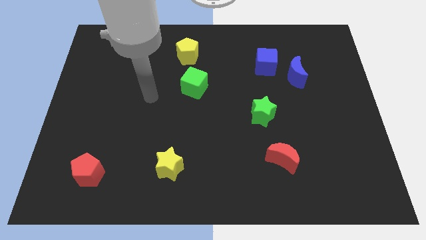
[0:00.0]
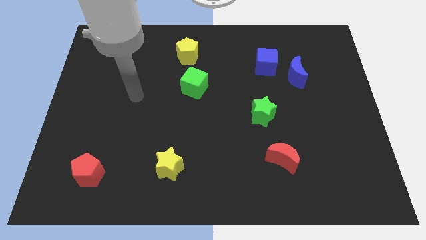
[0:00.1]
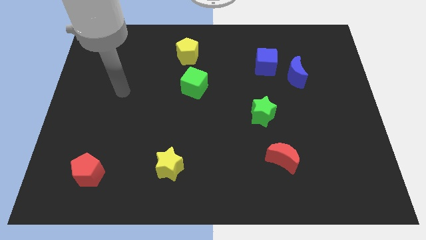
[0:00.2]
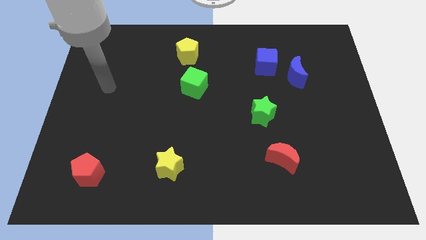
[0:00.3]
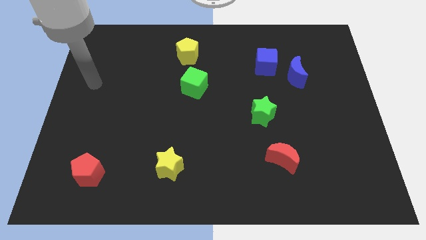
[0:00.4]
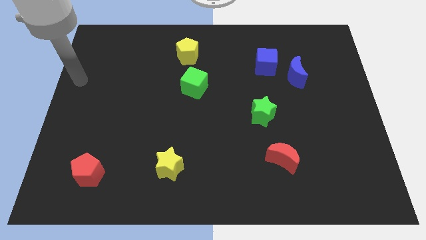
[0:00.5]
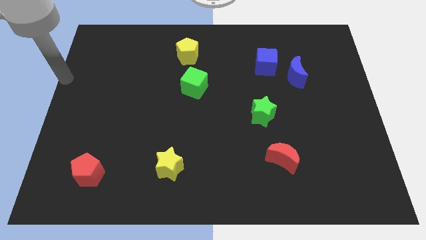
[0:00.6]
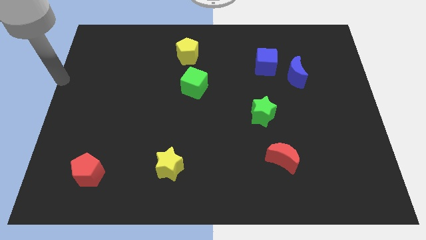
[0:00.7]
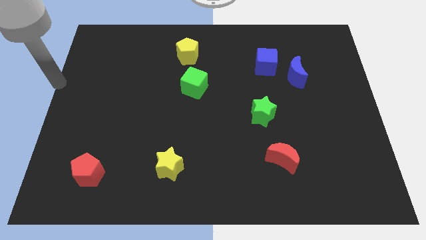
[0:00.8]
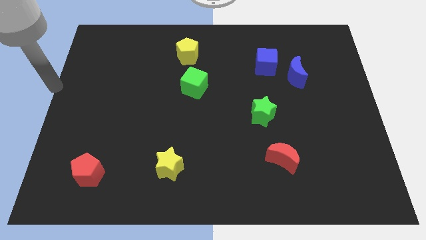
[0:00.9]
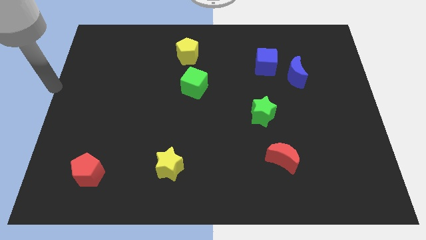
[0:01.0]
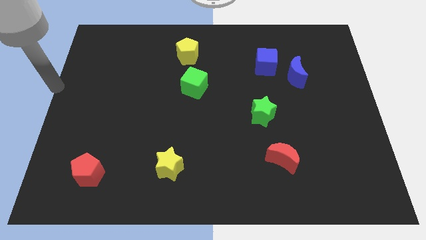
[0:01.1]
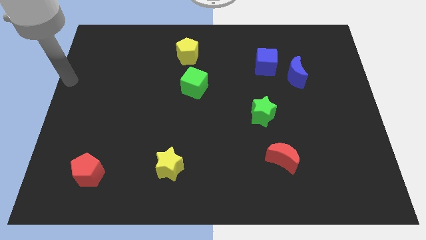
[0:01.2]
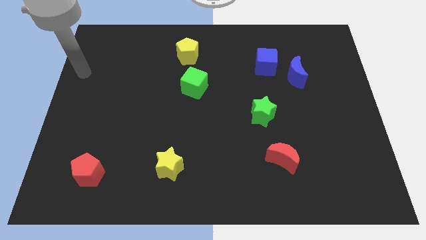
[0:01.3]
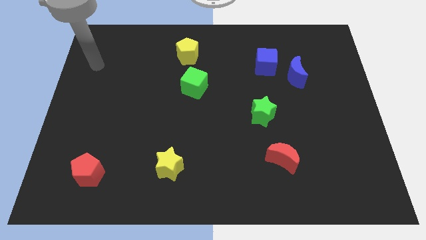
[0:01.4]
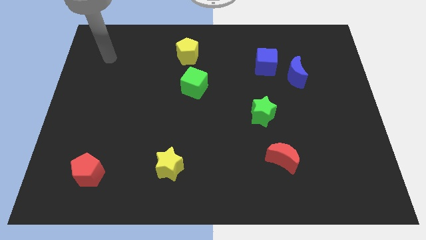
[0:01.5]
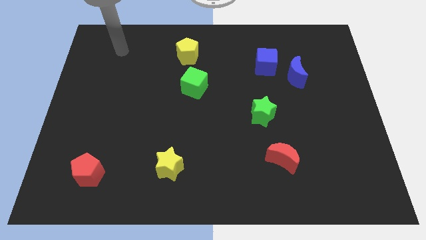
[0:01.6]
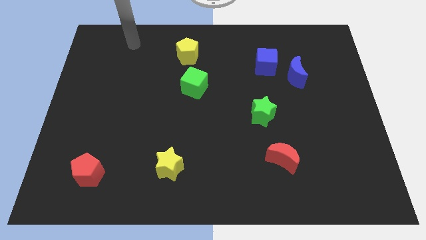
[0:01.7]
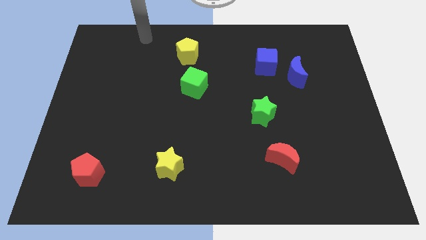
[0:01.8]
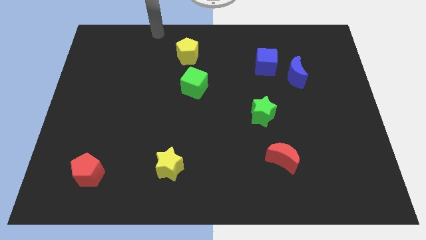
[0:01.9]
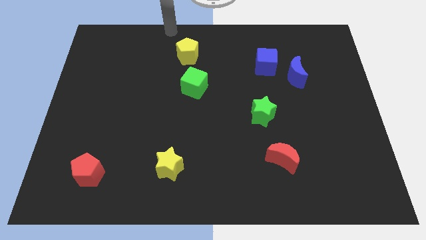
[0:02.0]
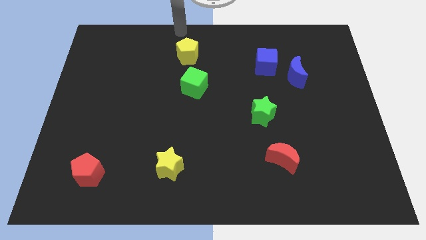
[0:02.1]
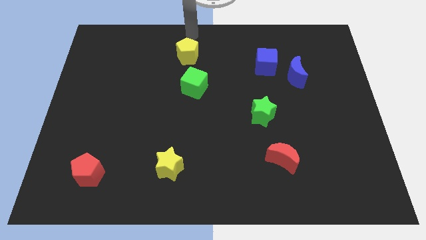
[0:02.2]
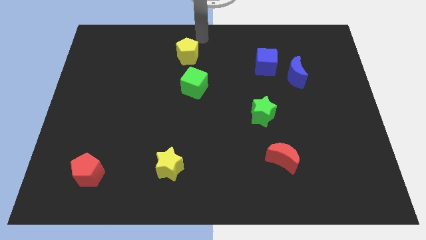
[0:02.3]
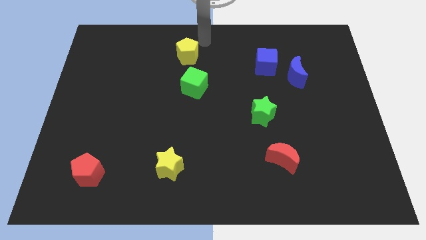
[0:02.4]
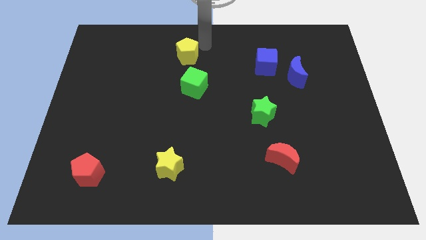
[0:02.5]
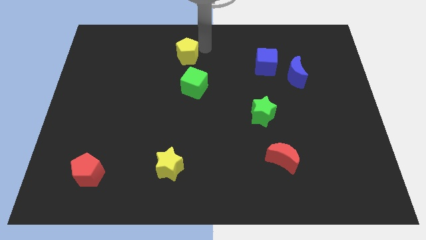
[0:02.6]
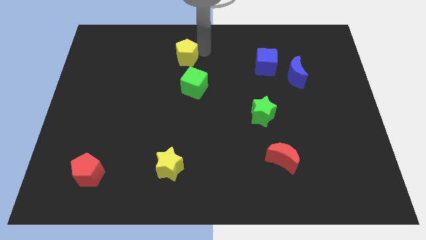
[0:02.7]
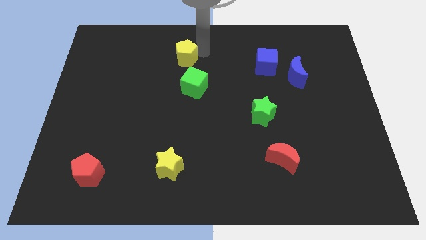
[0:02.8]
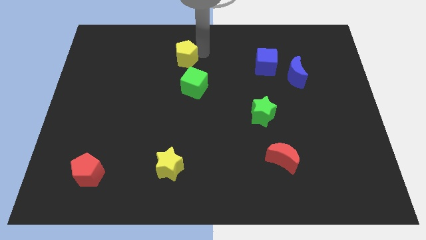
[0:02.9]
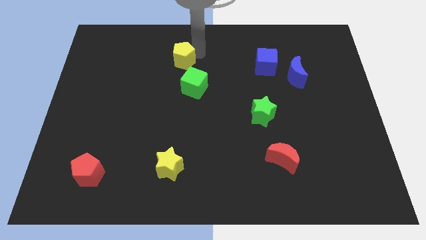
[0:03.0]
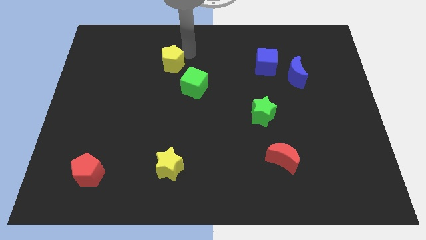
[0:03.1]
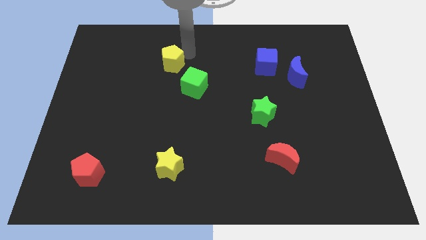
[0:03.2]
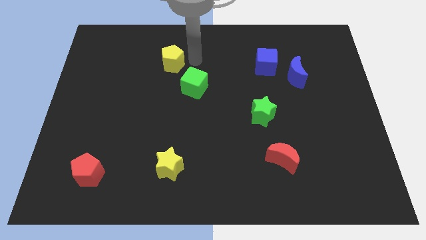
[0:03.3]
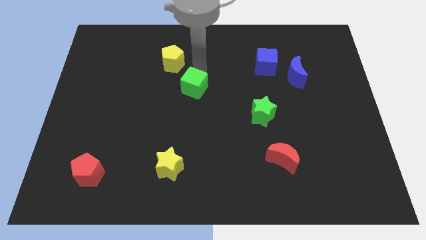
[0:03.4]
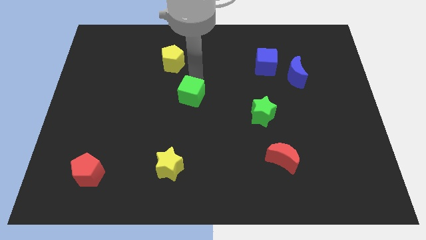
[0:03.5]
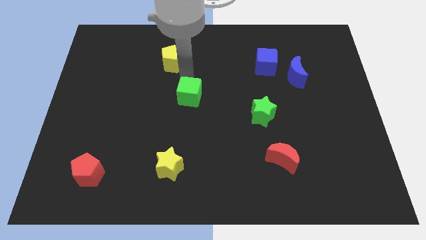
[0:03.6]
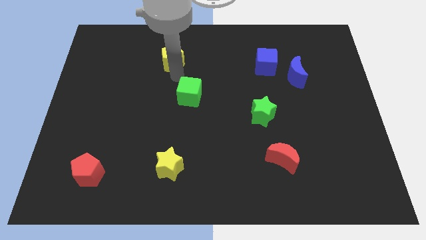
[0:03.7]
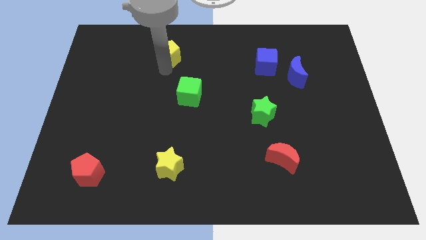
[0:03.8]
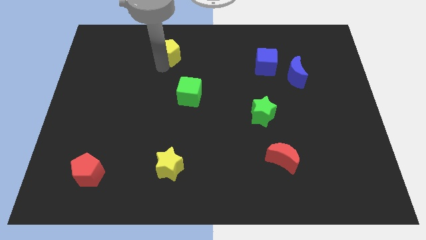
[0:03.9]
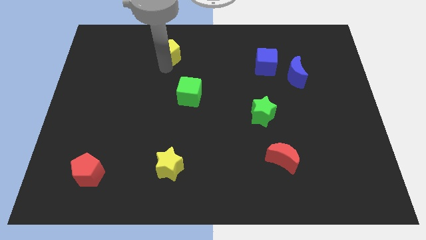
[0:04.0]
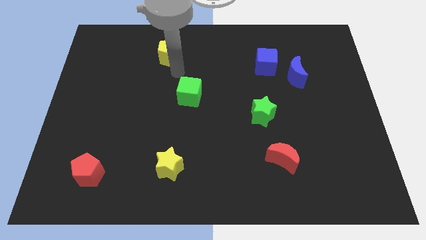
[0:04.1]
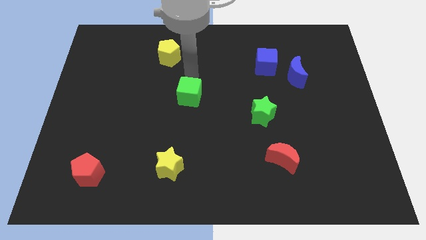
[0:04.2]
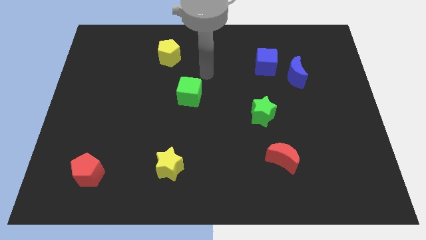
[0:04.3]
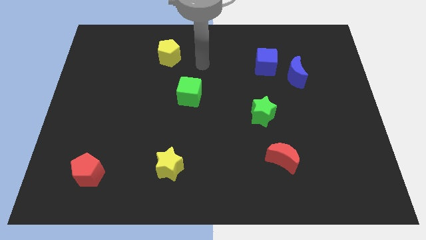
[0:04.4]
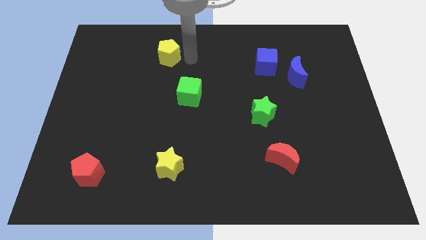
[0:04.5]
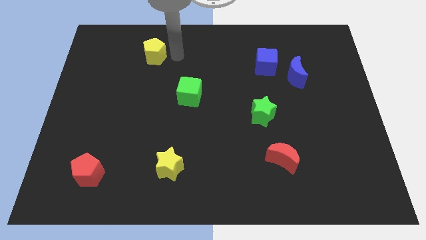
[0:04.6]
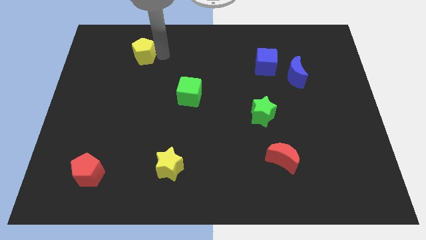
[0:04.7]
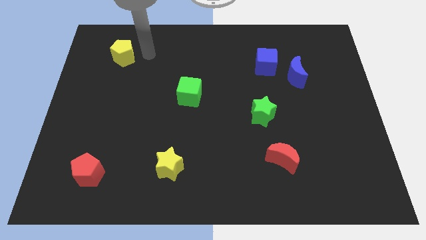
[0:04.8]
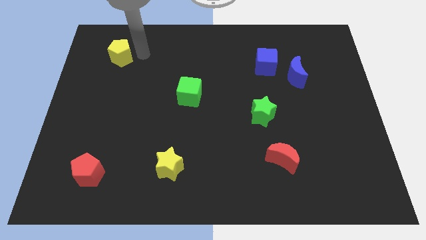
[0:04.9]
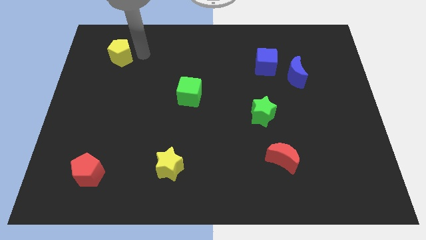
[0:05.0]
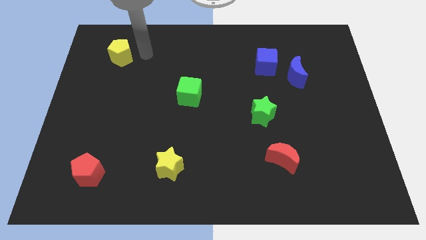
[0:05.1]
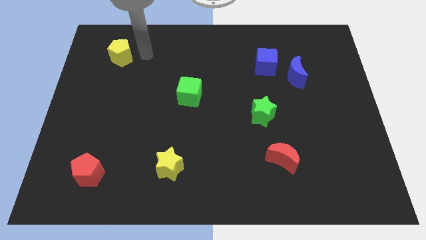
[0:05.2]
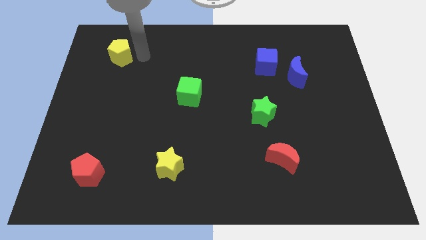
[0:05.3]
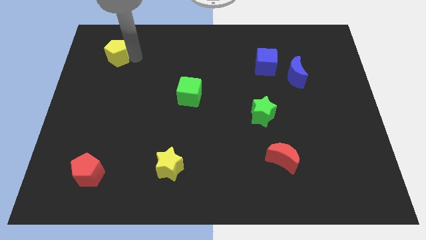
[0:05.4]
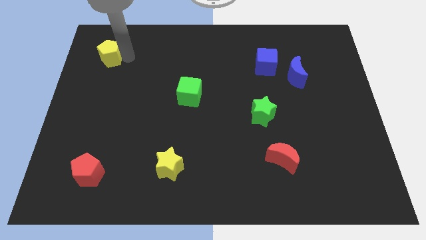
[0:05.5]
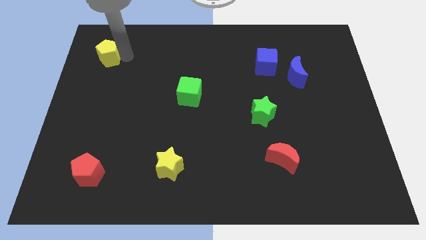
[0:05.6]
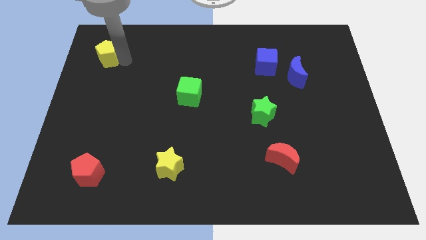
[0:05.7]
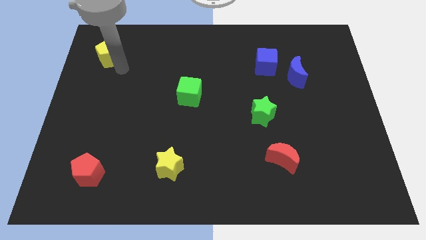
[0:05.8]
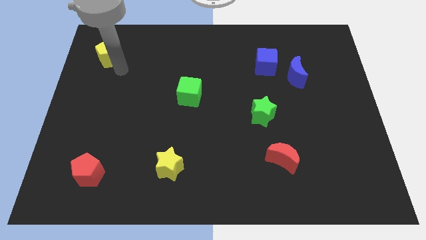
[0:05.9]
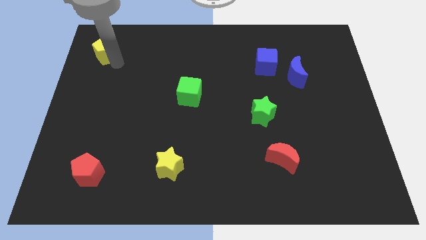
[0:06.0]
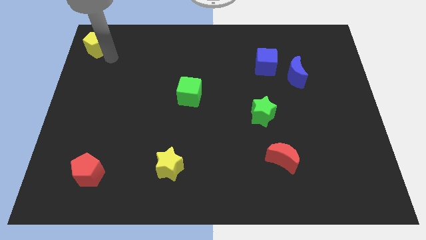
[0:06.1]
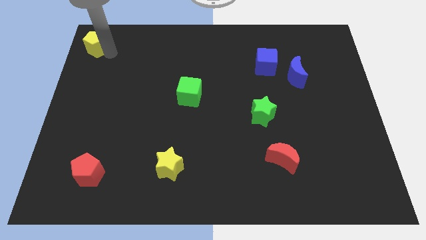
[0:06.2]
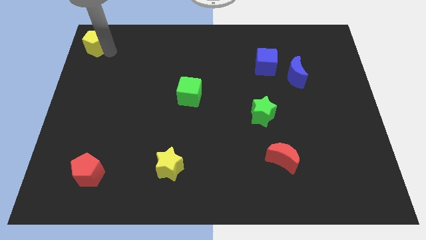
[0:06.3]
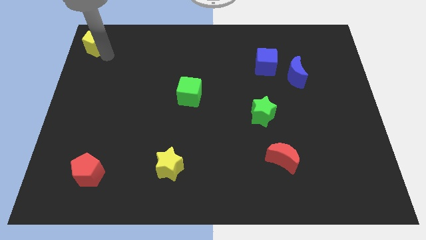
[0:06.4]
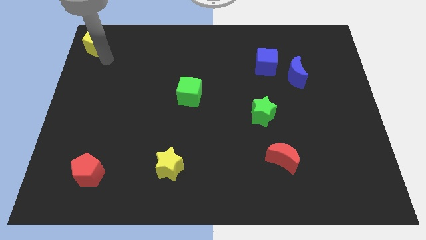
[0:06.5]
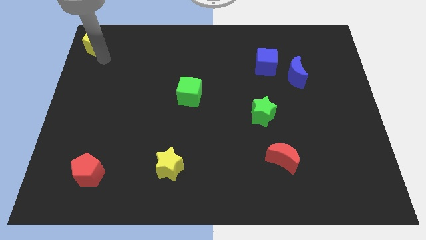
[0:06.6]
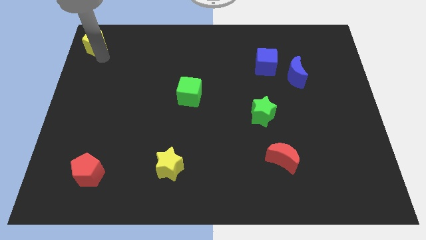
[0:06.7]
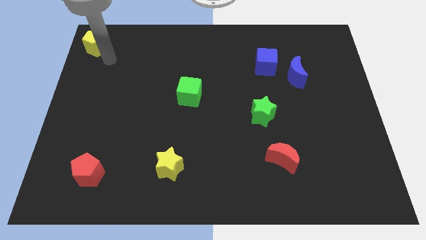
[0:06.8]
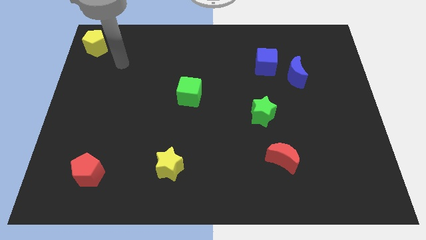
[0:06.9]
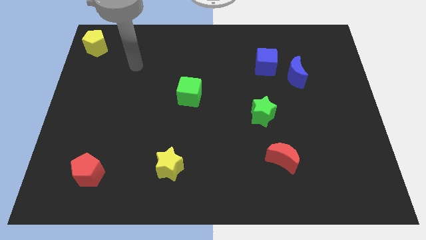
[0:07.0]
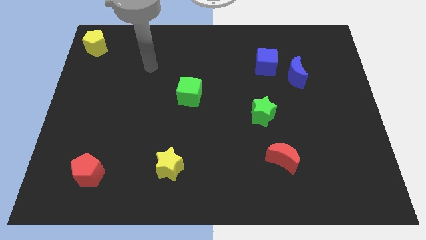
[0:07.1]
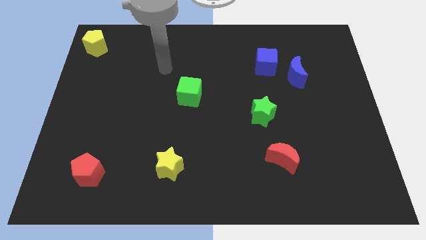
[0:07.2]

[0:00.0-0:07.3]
push the yellow pentagon slightly towards the top left corner of the board

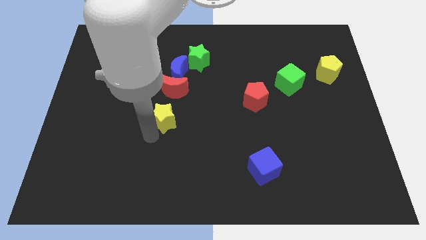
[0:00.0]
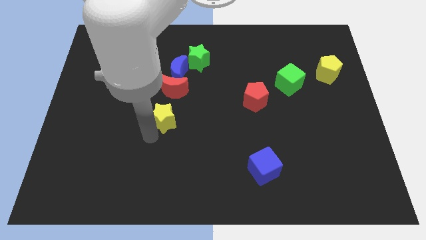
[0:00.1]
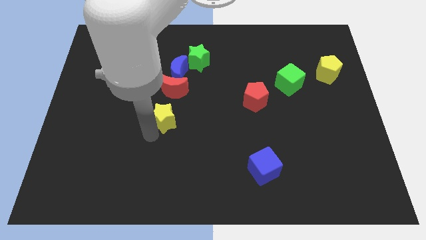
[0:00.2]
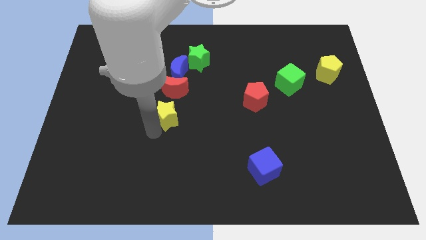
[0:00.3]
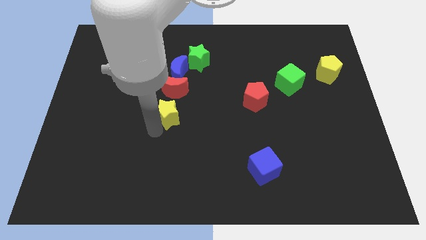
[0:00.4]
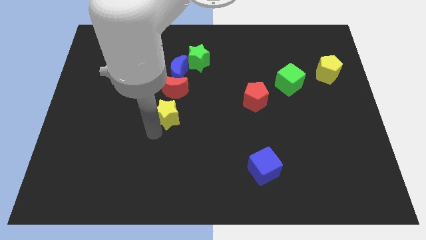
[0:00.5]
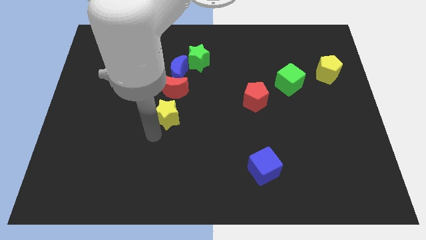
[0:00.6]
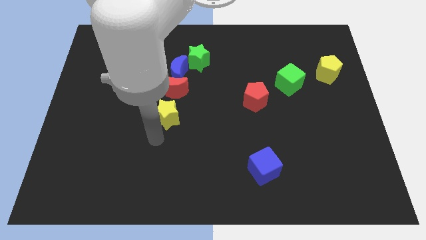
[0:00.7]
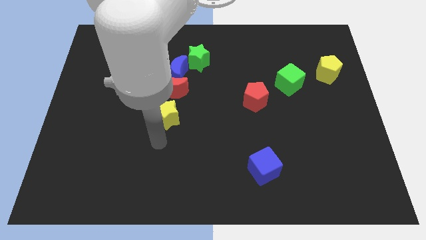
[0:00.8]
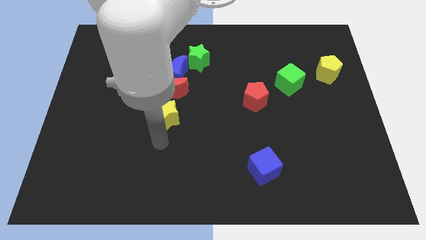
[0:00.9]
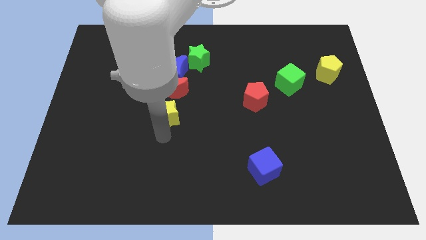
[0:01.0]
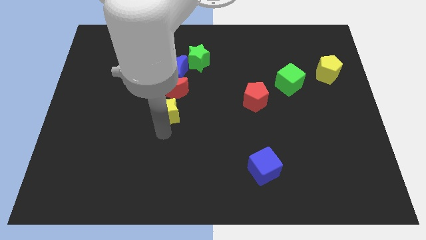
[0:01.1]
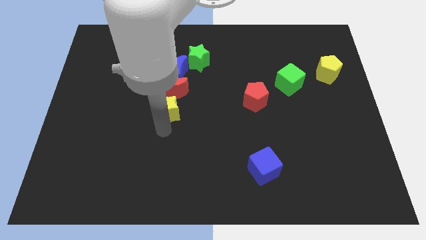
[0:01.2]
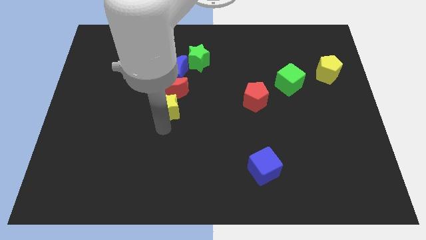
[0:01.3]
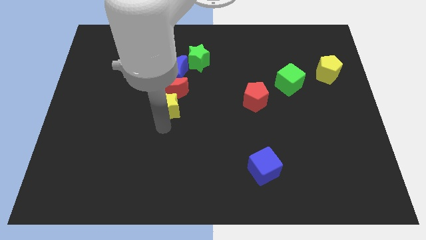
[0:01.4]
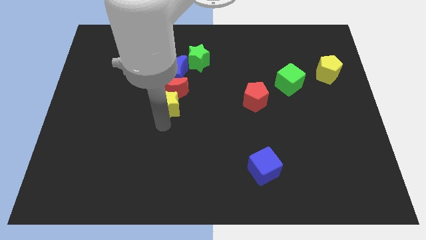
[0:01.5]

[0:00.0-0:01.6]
arrange the yellow star at the bottom of the red crescent

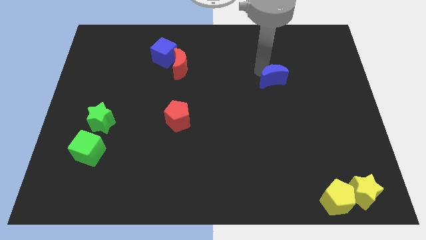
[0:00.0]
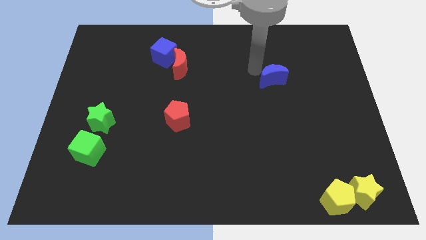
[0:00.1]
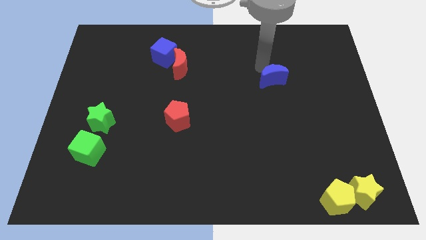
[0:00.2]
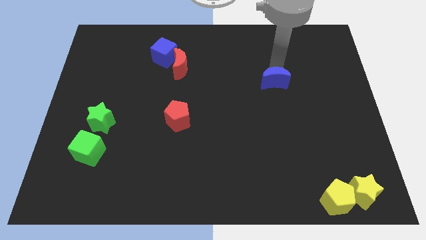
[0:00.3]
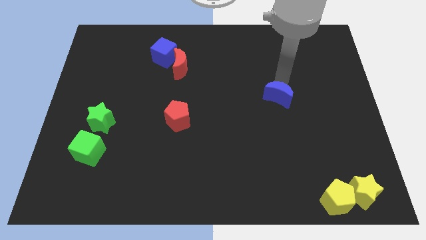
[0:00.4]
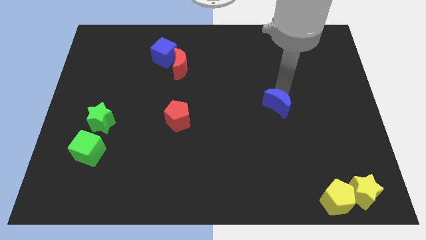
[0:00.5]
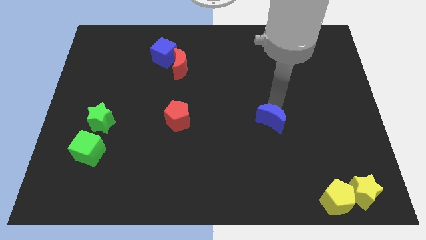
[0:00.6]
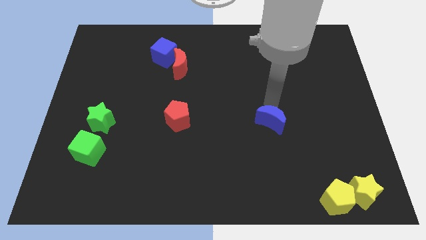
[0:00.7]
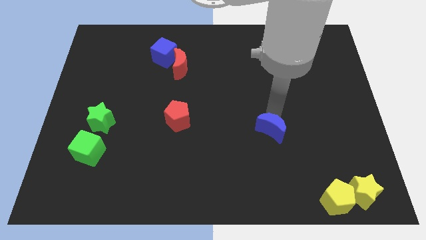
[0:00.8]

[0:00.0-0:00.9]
move the blue crescent to the top left of the yellow pentagon
